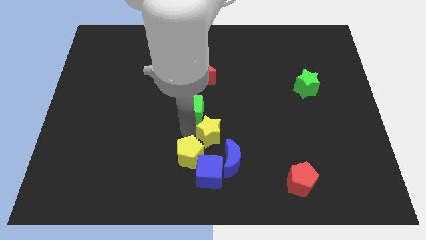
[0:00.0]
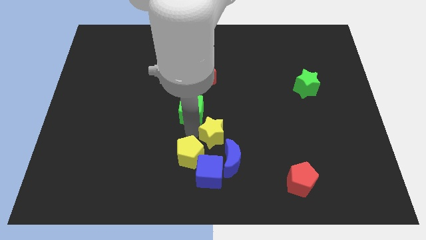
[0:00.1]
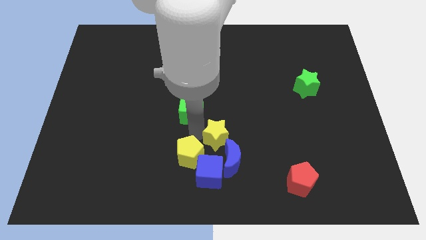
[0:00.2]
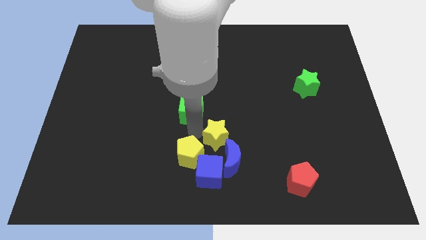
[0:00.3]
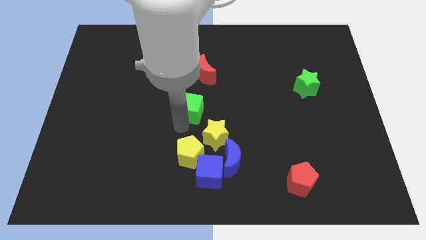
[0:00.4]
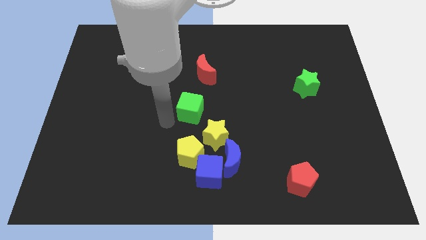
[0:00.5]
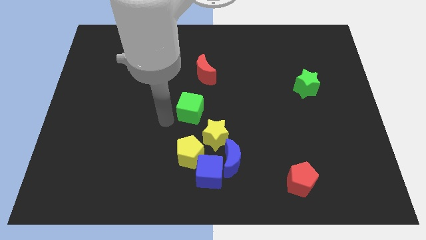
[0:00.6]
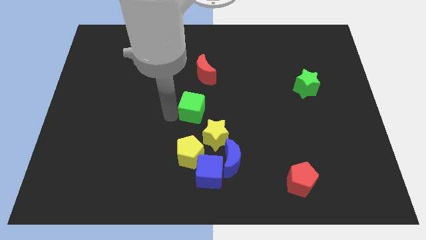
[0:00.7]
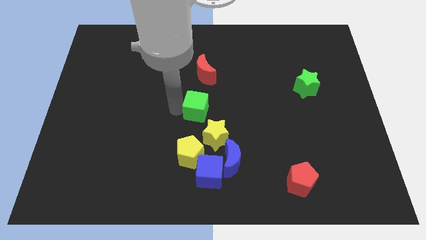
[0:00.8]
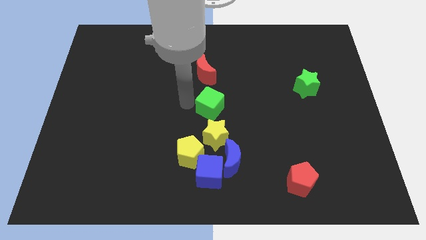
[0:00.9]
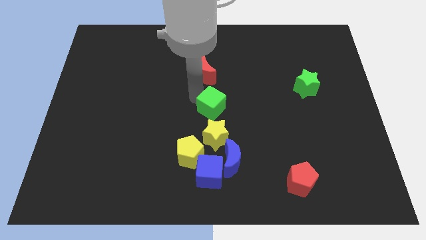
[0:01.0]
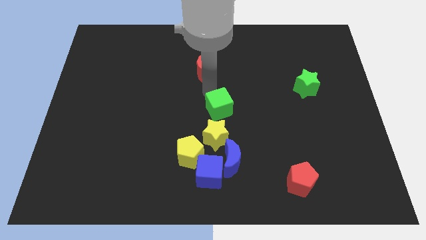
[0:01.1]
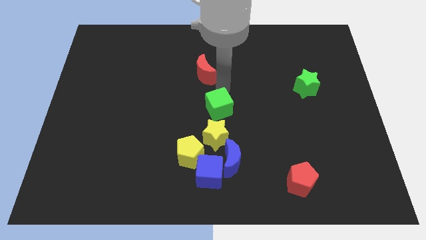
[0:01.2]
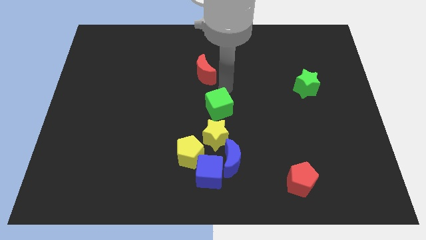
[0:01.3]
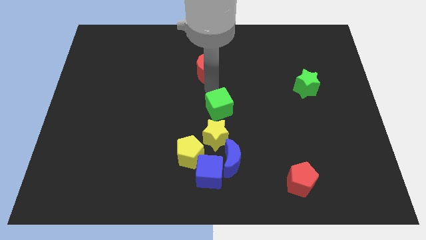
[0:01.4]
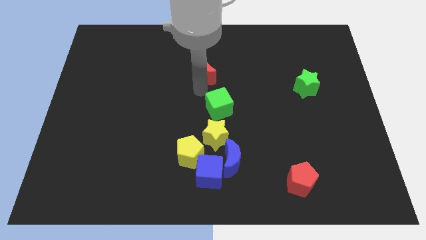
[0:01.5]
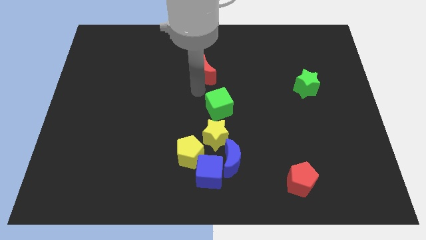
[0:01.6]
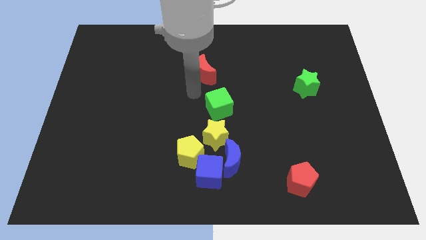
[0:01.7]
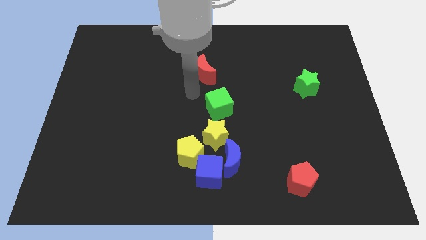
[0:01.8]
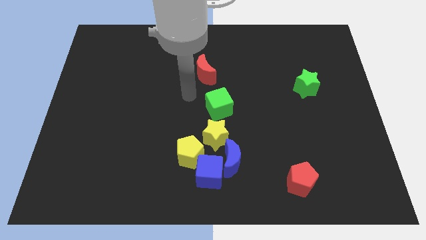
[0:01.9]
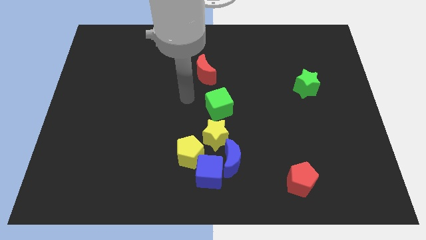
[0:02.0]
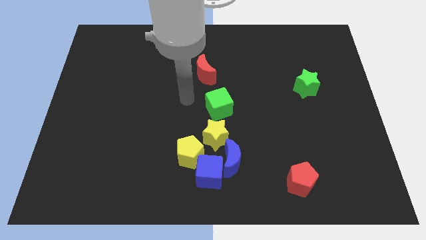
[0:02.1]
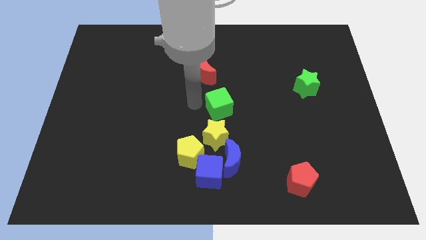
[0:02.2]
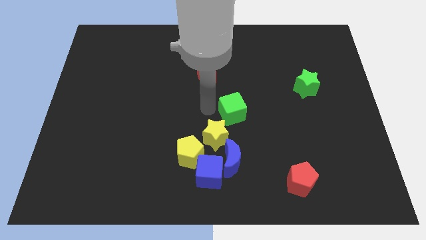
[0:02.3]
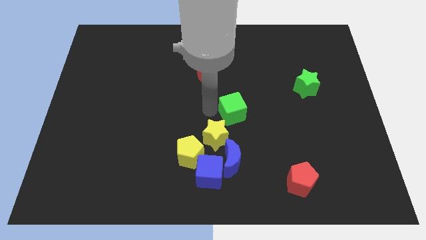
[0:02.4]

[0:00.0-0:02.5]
push green cube towards top right side of the yellow star

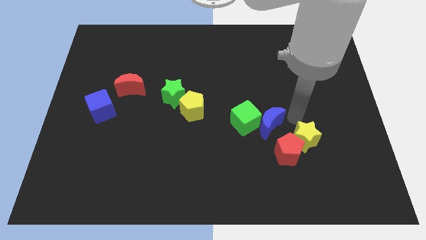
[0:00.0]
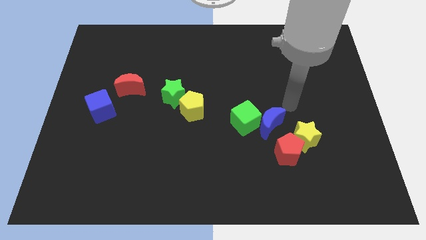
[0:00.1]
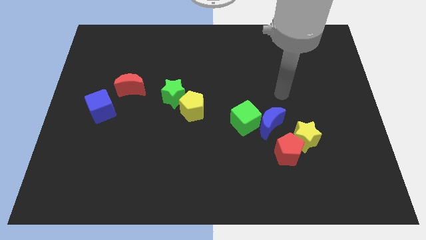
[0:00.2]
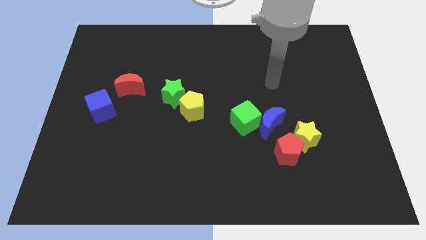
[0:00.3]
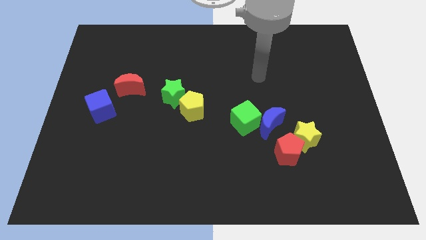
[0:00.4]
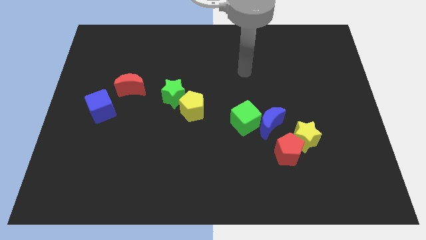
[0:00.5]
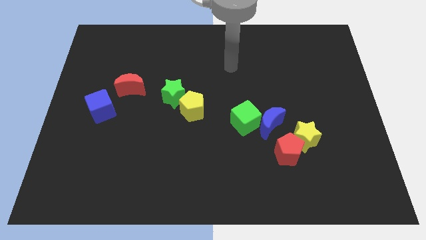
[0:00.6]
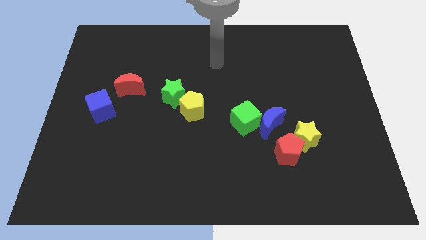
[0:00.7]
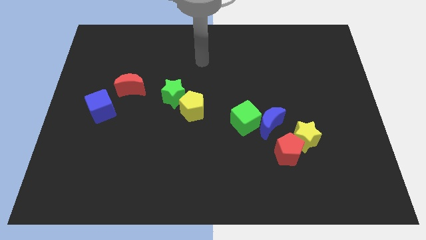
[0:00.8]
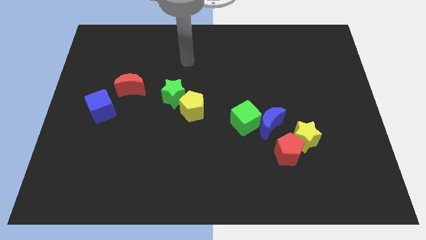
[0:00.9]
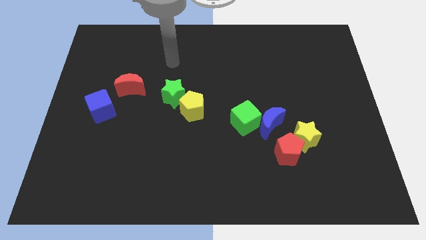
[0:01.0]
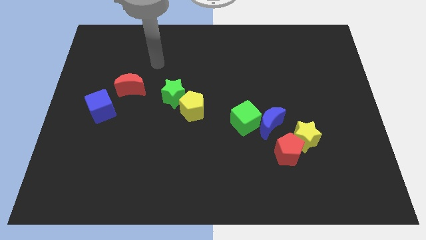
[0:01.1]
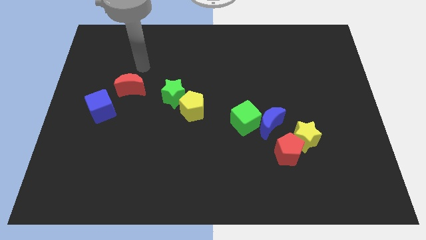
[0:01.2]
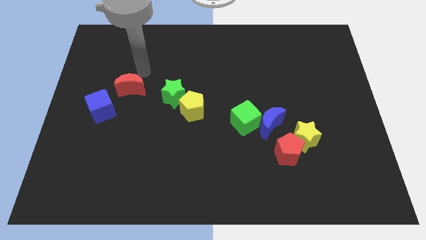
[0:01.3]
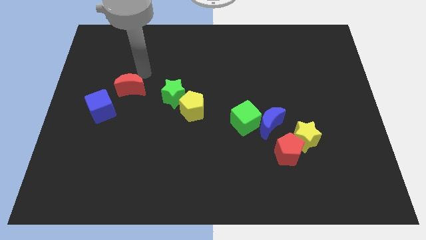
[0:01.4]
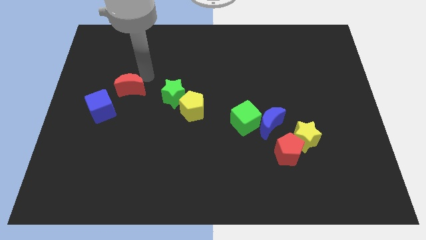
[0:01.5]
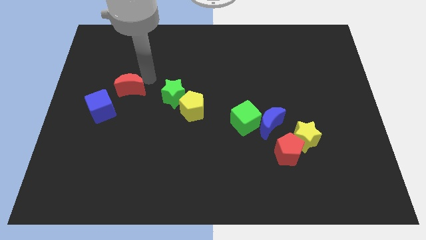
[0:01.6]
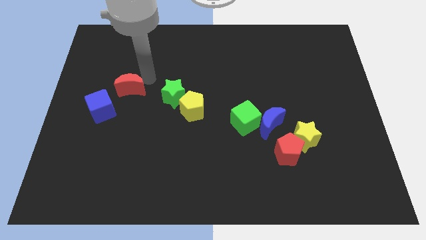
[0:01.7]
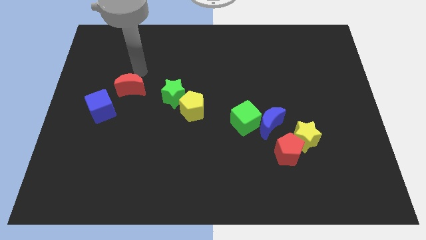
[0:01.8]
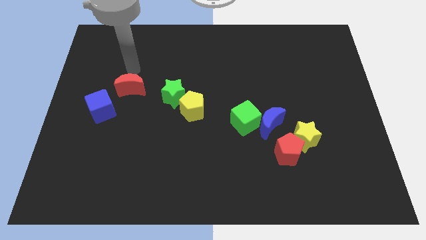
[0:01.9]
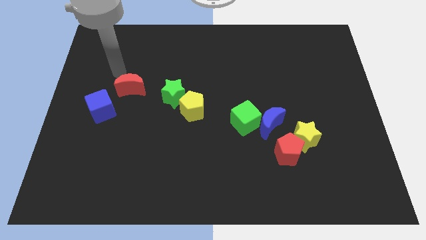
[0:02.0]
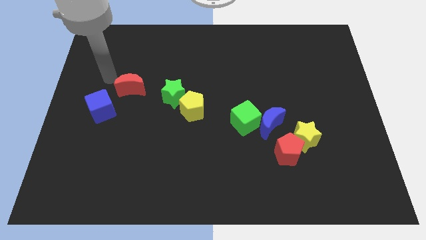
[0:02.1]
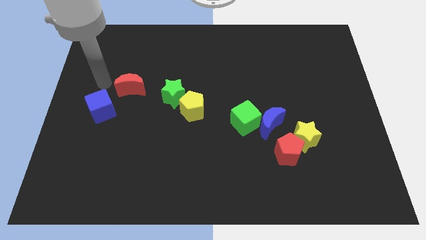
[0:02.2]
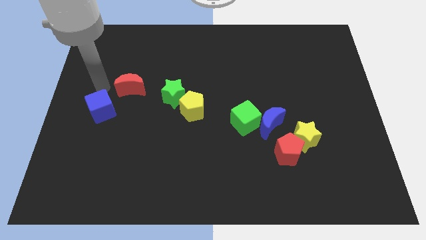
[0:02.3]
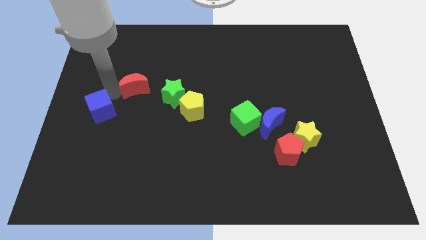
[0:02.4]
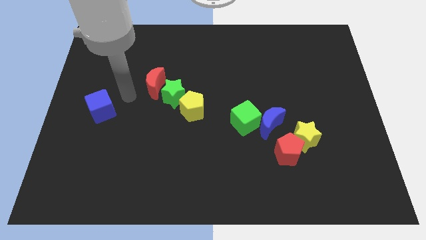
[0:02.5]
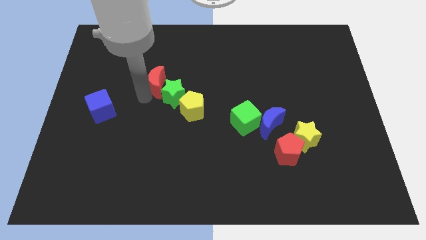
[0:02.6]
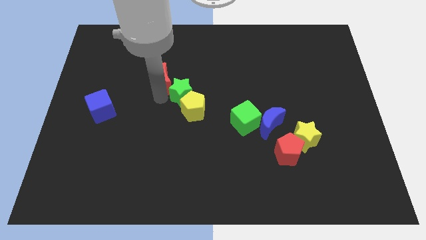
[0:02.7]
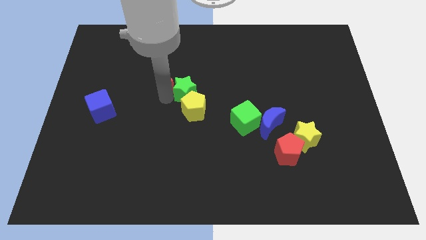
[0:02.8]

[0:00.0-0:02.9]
push the red moon into green star

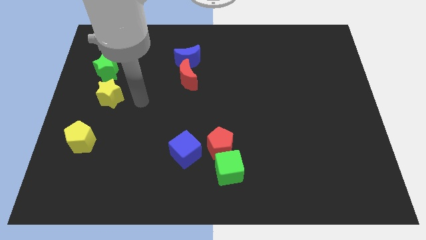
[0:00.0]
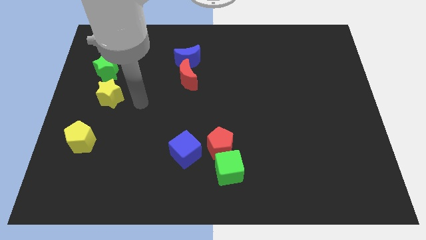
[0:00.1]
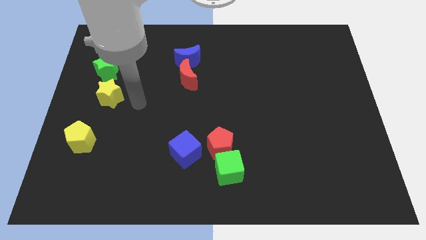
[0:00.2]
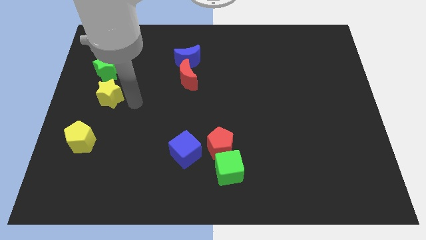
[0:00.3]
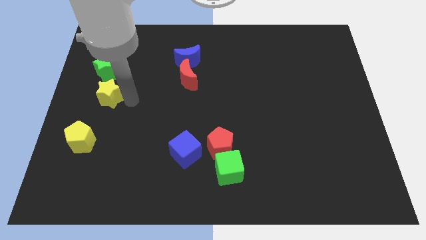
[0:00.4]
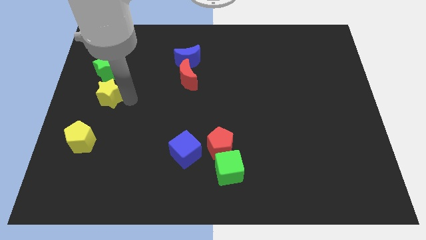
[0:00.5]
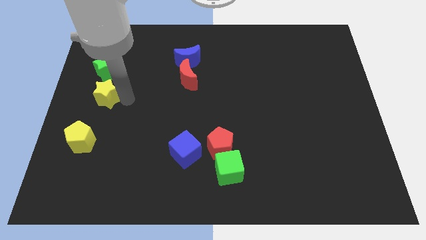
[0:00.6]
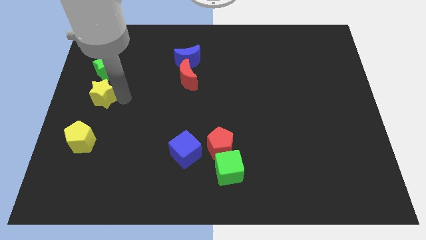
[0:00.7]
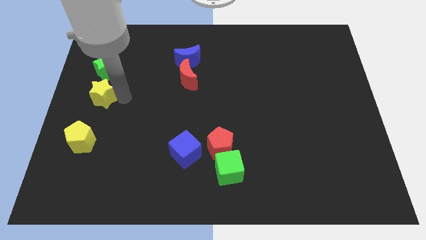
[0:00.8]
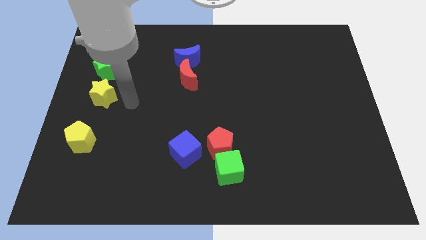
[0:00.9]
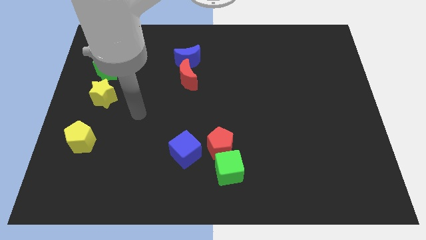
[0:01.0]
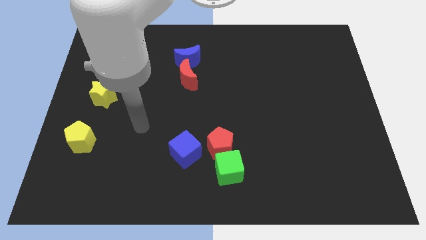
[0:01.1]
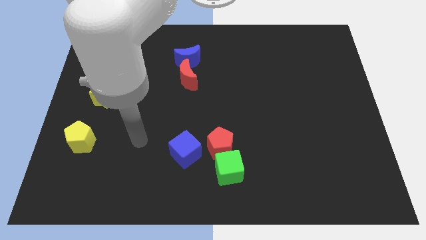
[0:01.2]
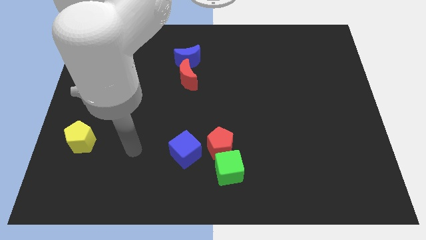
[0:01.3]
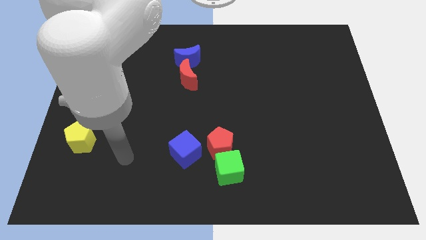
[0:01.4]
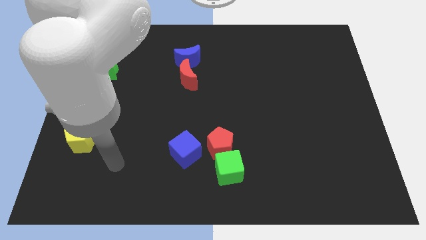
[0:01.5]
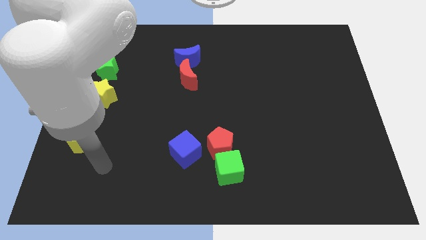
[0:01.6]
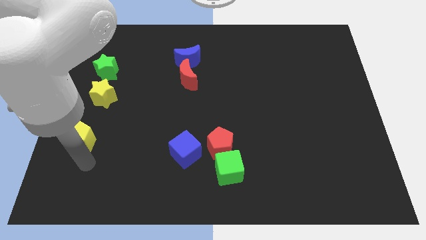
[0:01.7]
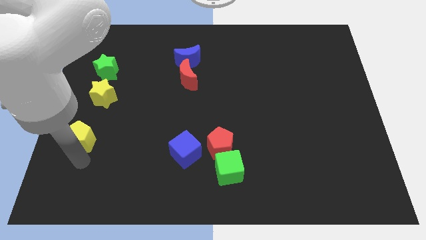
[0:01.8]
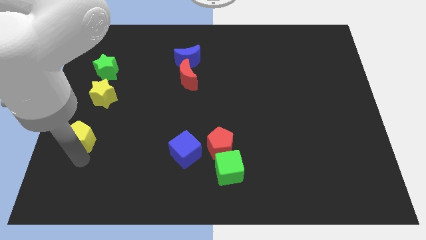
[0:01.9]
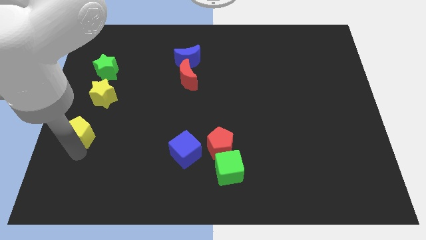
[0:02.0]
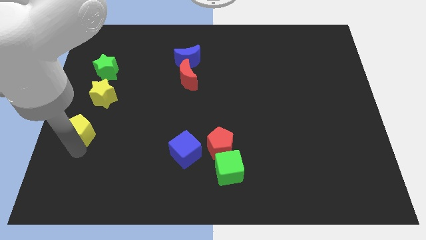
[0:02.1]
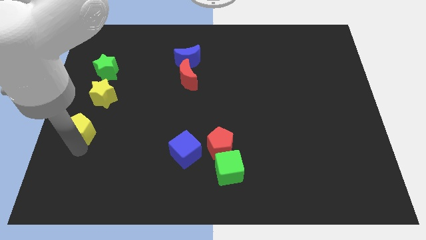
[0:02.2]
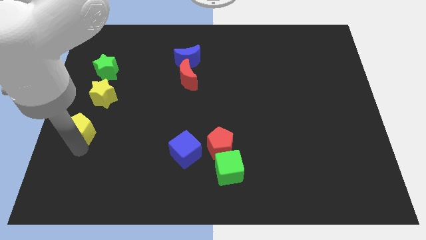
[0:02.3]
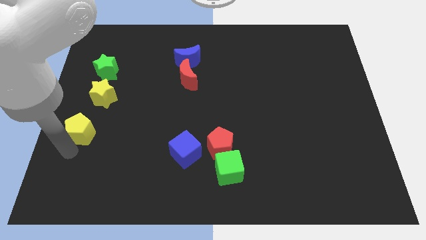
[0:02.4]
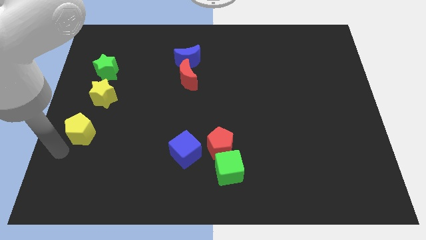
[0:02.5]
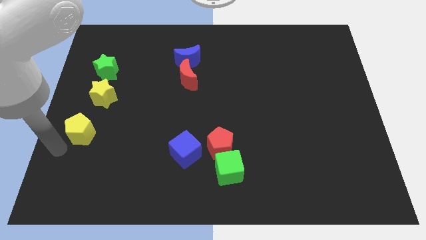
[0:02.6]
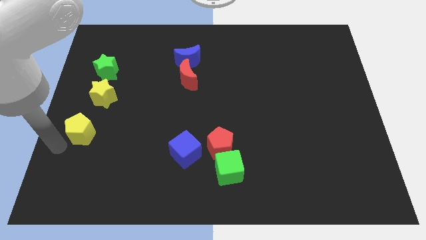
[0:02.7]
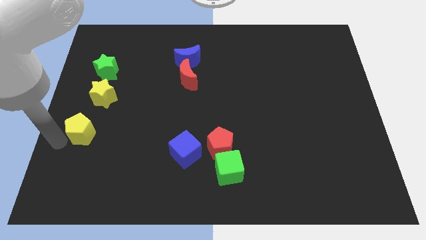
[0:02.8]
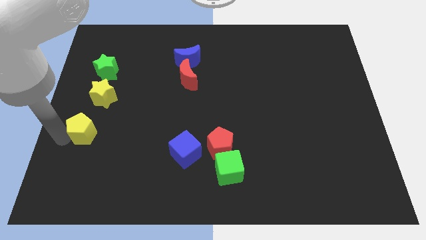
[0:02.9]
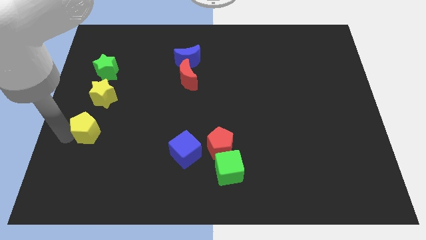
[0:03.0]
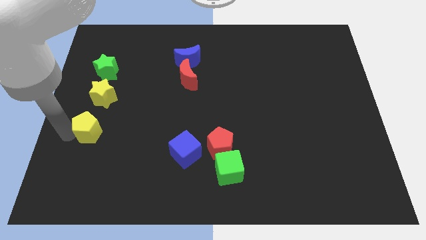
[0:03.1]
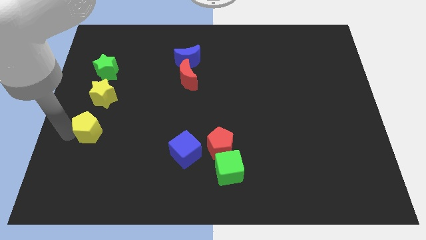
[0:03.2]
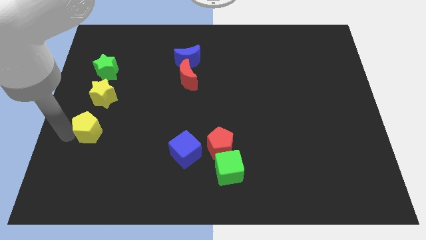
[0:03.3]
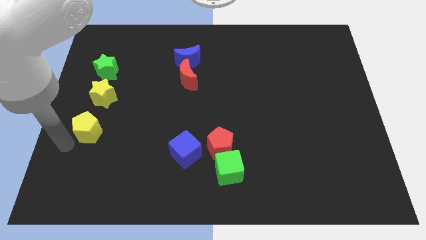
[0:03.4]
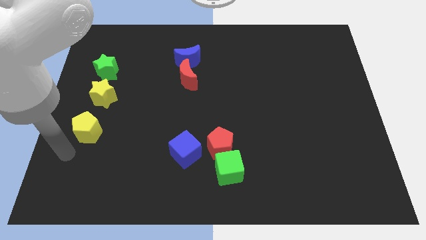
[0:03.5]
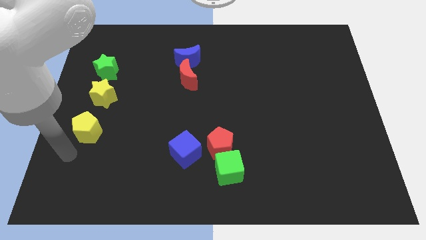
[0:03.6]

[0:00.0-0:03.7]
adjust the yellow blocks to form a vertical line
